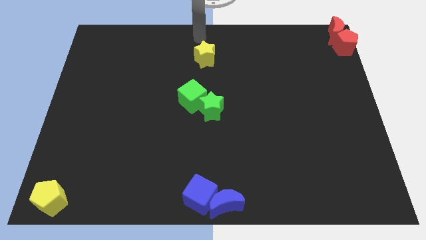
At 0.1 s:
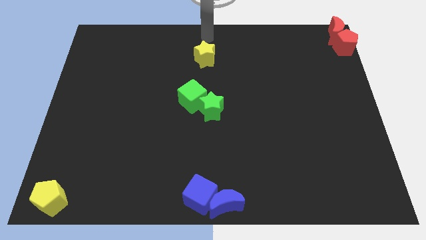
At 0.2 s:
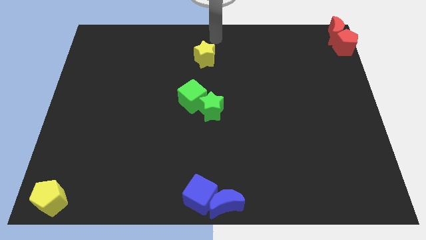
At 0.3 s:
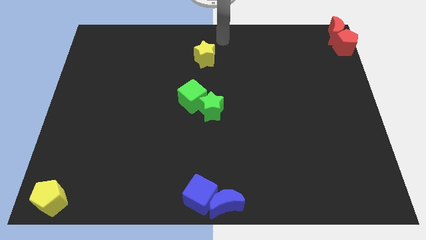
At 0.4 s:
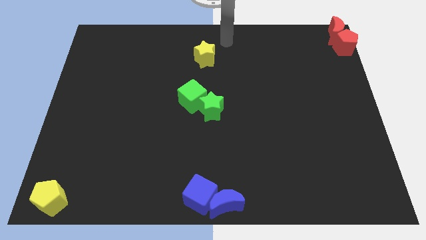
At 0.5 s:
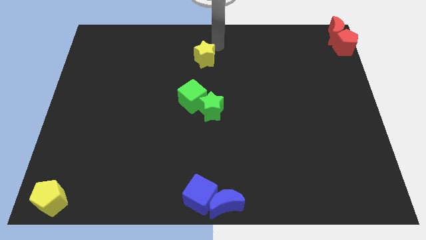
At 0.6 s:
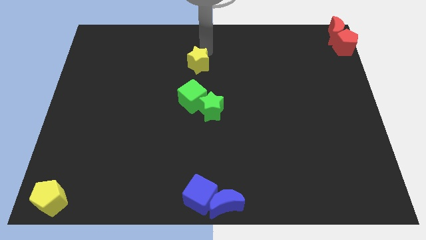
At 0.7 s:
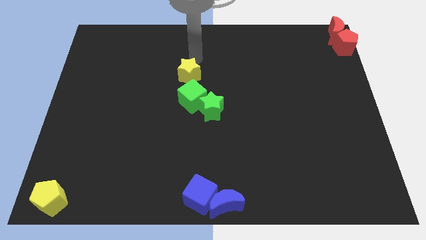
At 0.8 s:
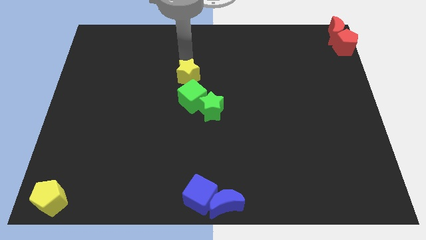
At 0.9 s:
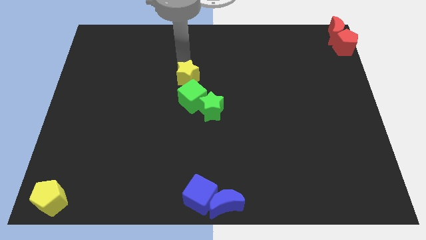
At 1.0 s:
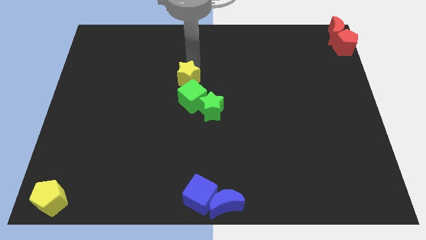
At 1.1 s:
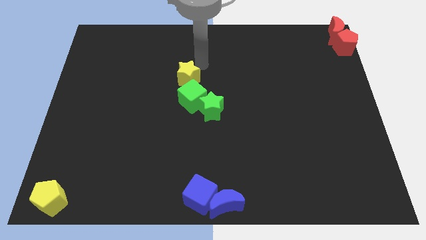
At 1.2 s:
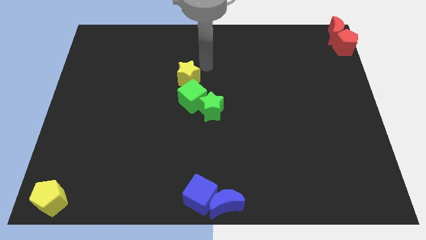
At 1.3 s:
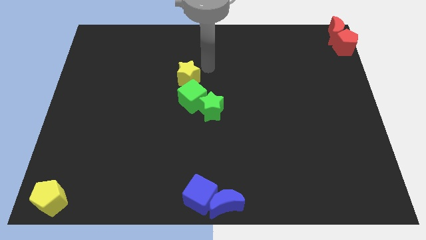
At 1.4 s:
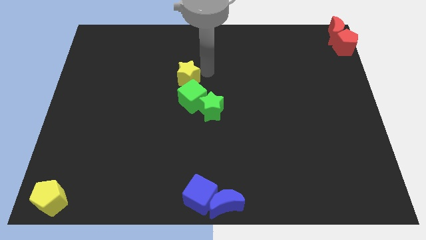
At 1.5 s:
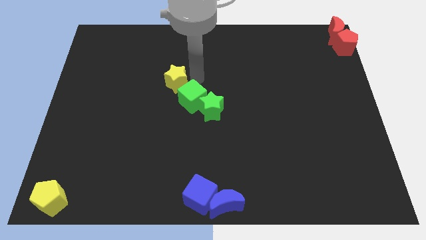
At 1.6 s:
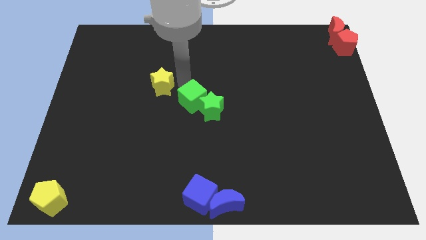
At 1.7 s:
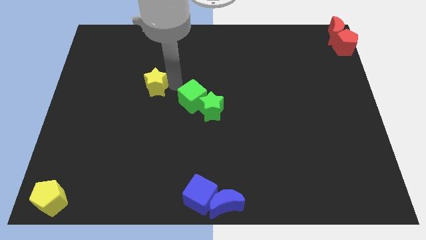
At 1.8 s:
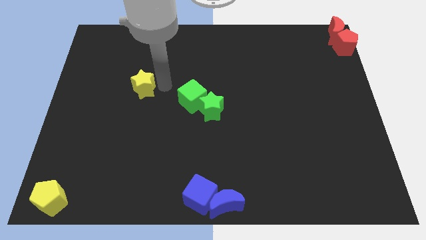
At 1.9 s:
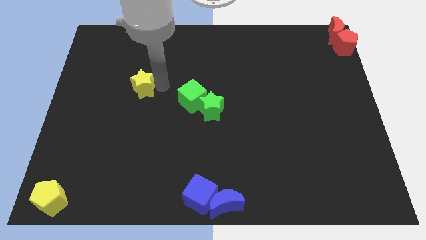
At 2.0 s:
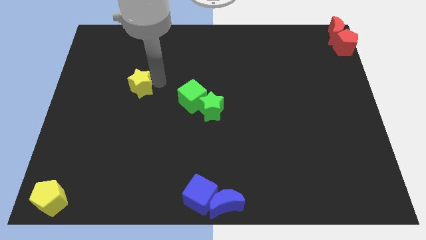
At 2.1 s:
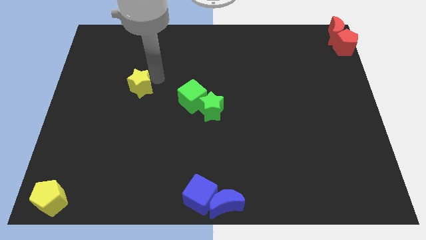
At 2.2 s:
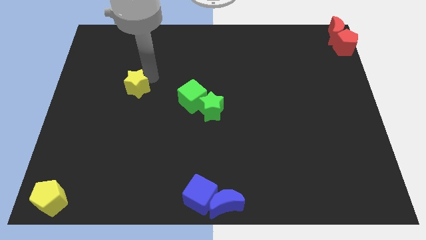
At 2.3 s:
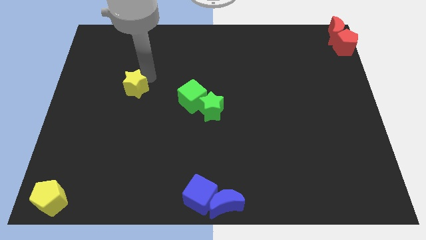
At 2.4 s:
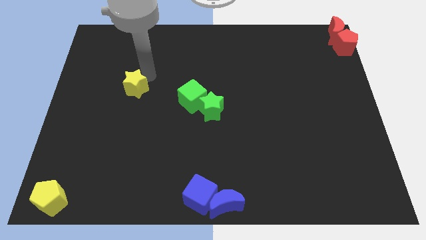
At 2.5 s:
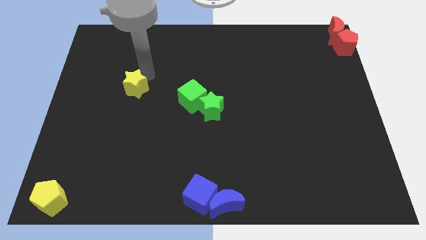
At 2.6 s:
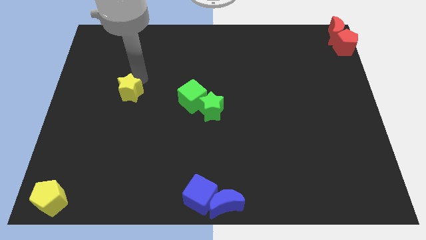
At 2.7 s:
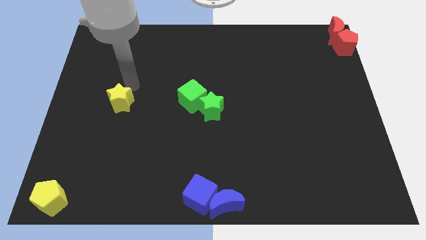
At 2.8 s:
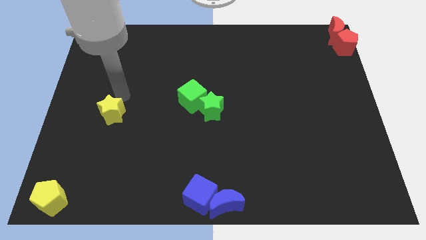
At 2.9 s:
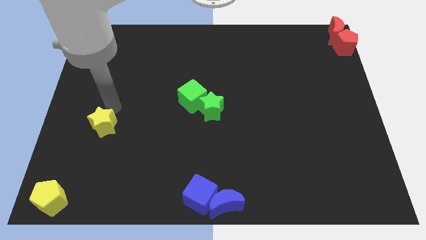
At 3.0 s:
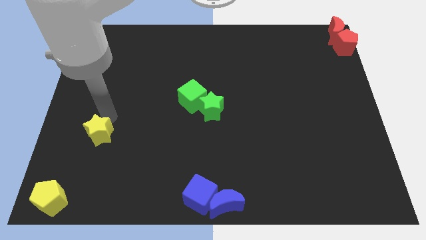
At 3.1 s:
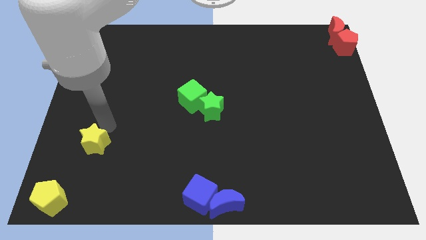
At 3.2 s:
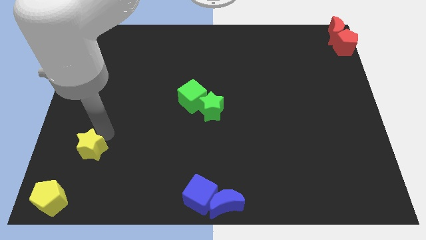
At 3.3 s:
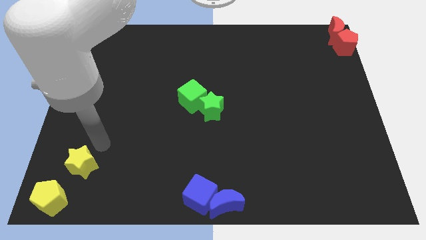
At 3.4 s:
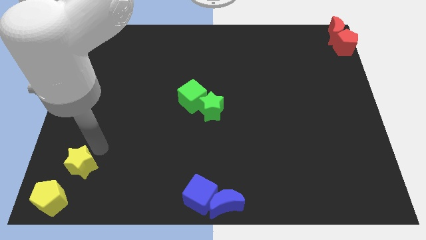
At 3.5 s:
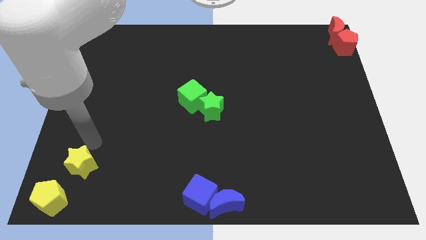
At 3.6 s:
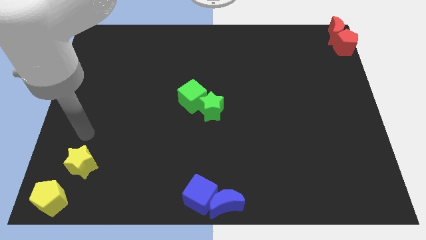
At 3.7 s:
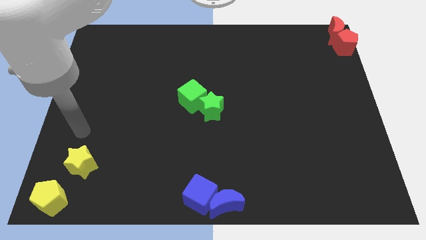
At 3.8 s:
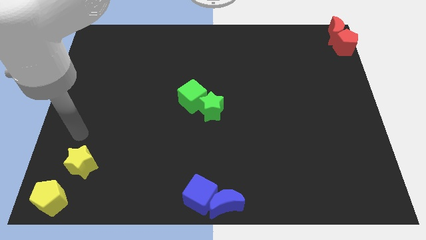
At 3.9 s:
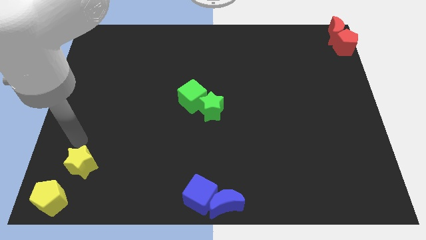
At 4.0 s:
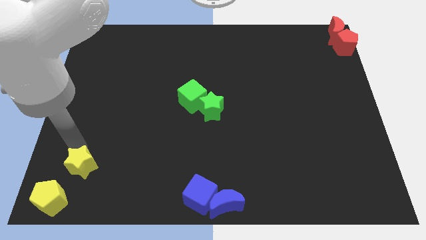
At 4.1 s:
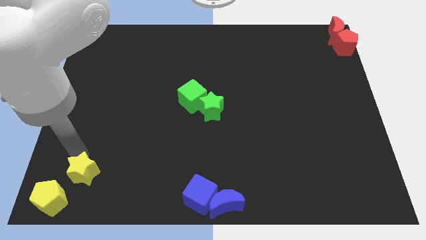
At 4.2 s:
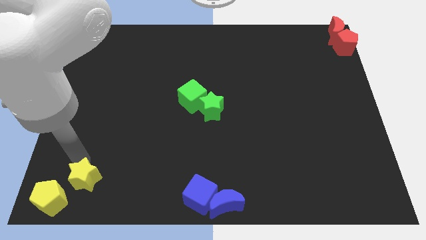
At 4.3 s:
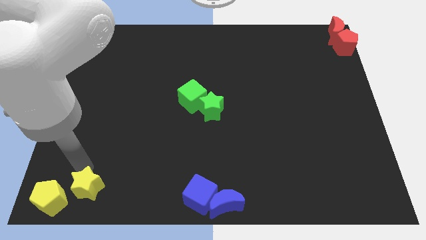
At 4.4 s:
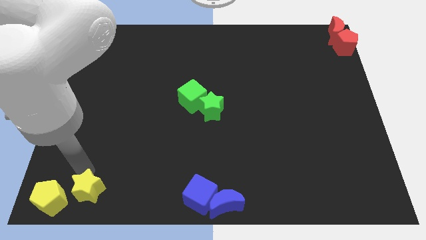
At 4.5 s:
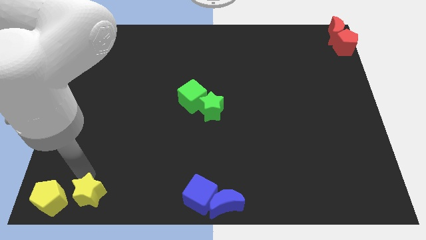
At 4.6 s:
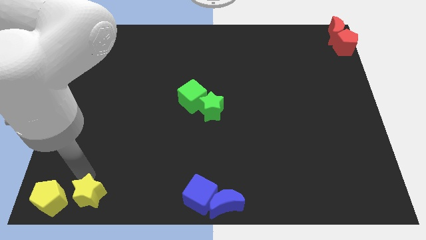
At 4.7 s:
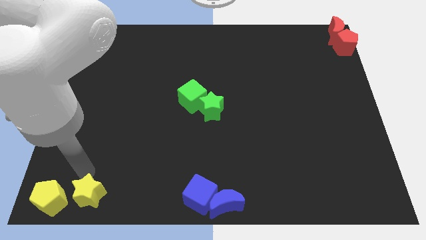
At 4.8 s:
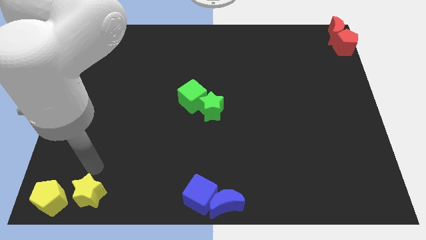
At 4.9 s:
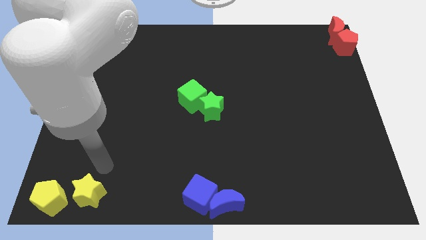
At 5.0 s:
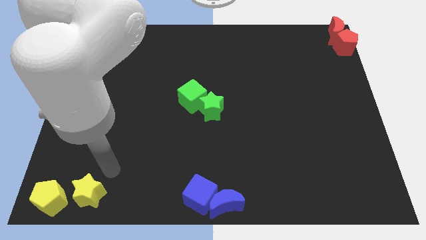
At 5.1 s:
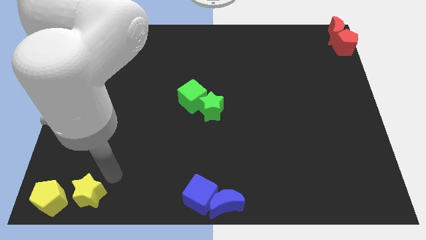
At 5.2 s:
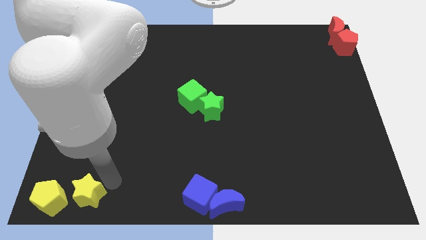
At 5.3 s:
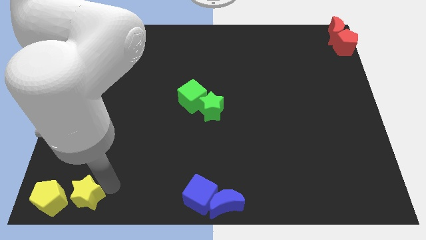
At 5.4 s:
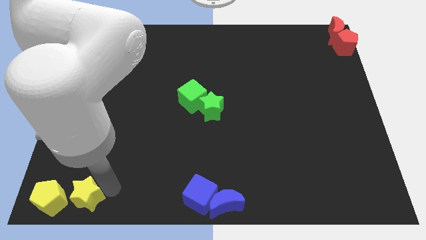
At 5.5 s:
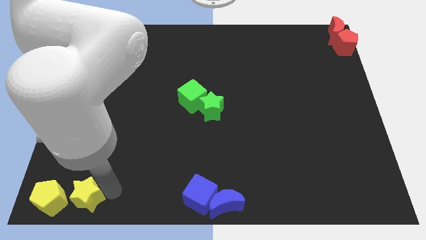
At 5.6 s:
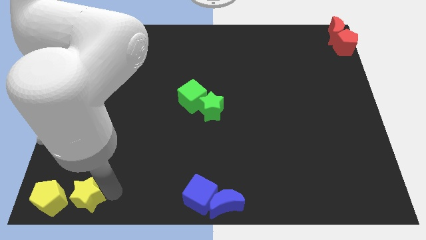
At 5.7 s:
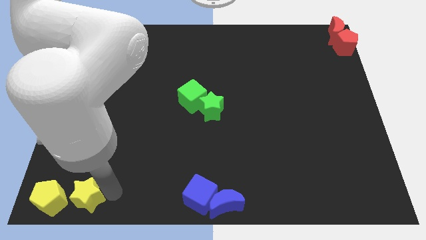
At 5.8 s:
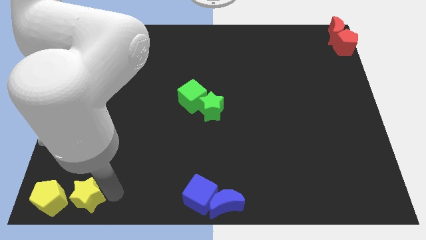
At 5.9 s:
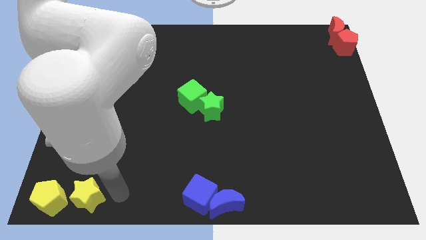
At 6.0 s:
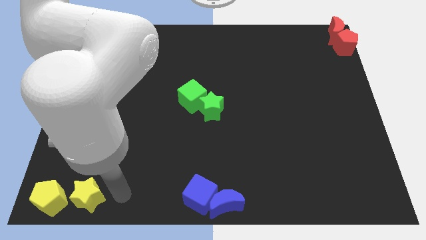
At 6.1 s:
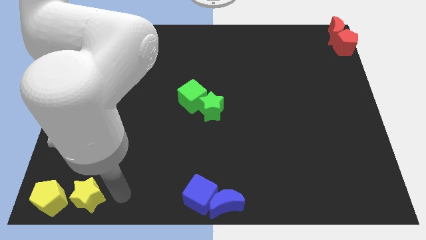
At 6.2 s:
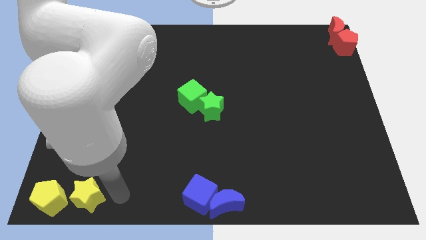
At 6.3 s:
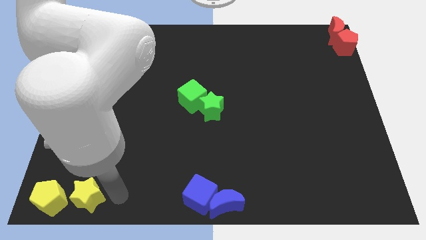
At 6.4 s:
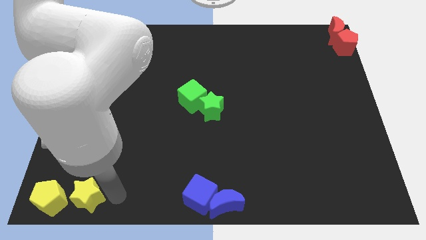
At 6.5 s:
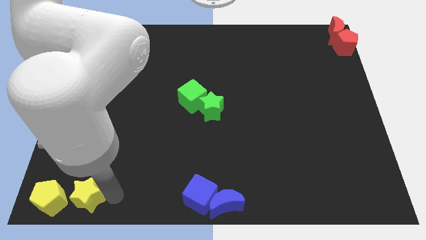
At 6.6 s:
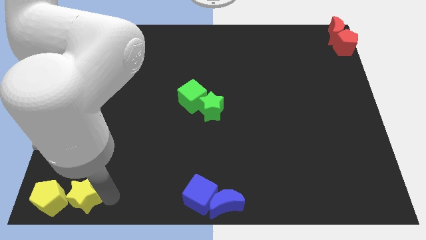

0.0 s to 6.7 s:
move yellow star beside yellow pentagon

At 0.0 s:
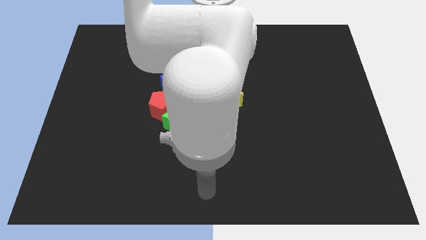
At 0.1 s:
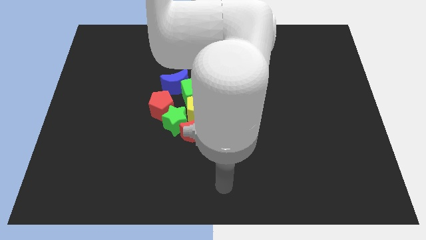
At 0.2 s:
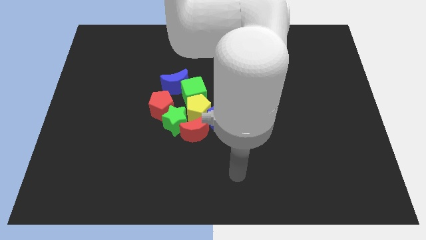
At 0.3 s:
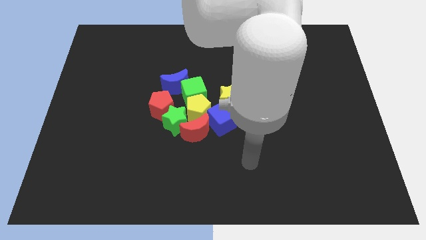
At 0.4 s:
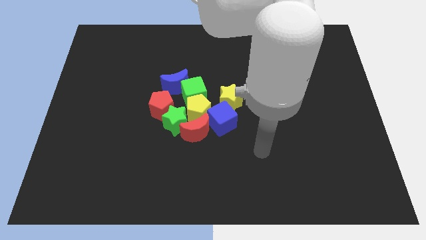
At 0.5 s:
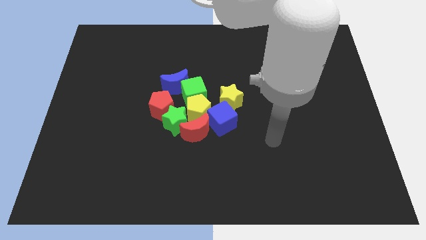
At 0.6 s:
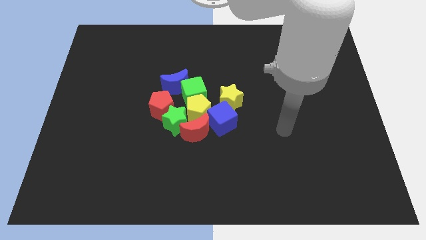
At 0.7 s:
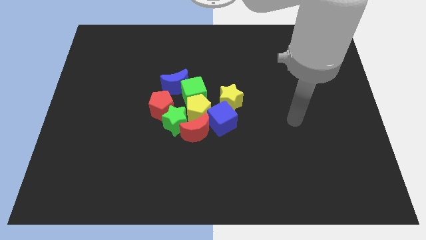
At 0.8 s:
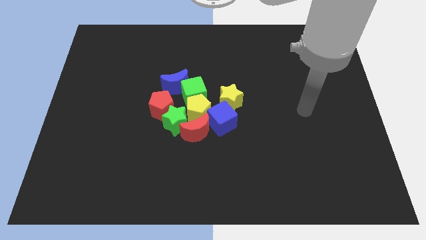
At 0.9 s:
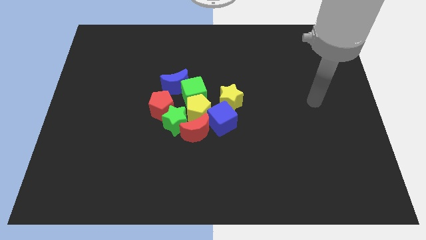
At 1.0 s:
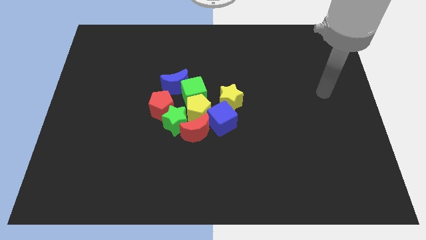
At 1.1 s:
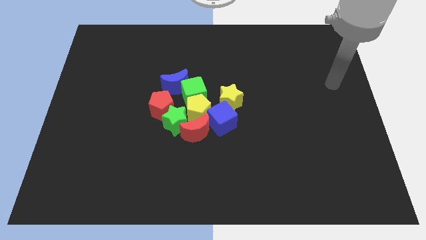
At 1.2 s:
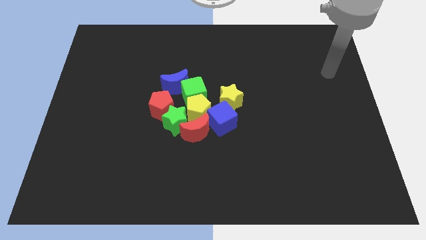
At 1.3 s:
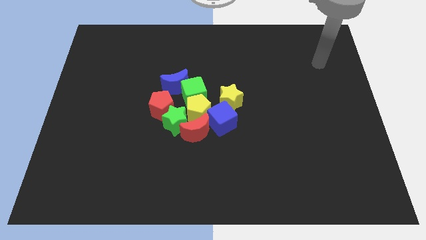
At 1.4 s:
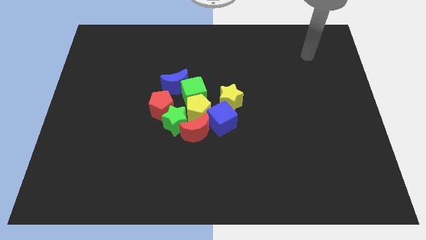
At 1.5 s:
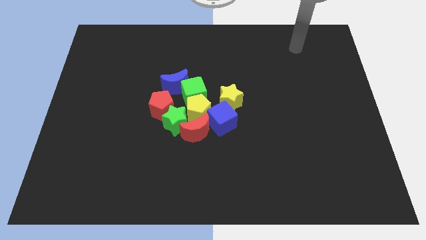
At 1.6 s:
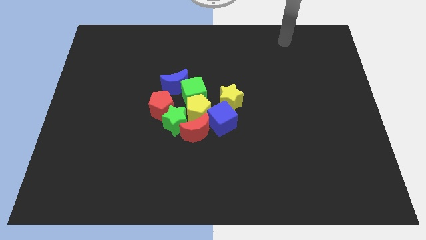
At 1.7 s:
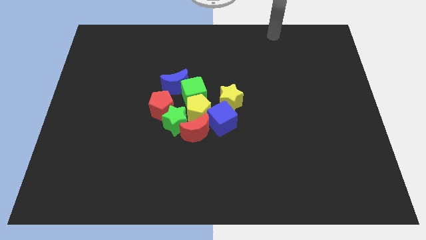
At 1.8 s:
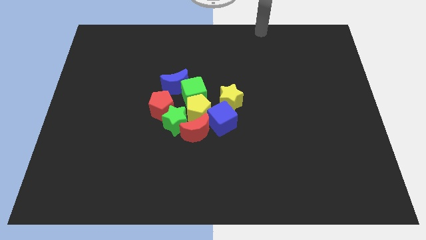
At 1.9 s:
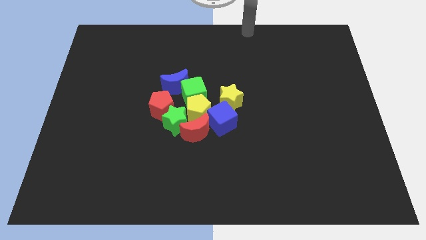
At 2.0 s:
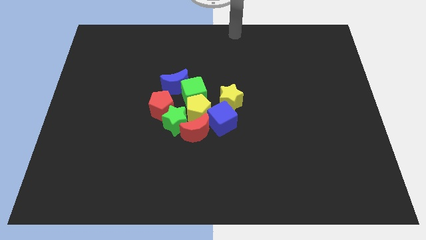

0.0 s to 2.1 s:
point the arm to the top center of the board

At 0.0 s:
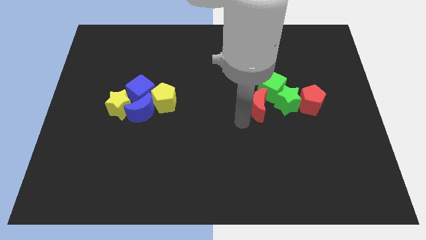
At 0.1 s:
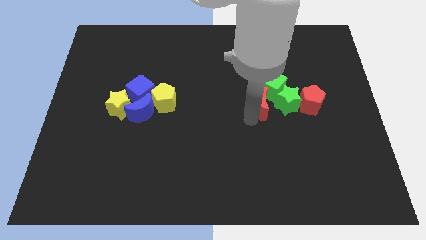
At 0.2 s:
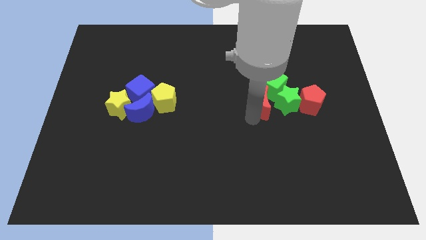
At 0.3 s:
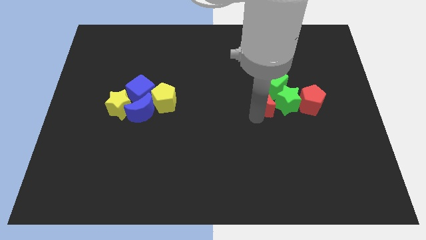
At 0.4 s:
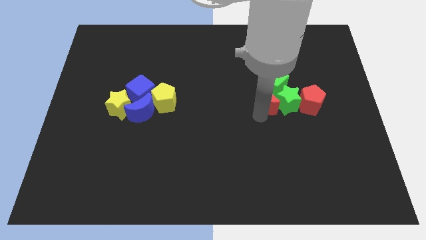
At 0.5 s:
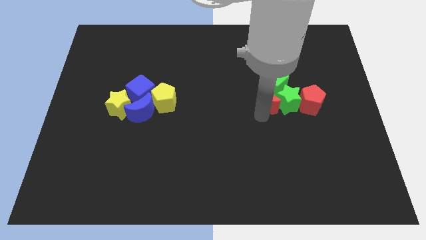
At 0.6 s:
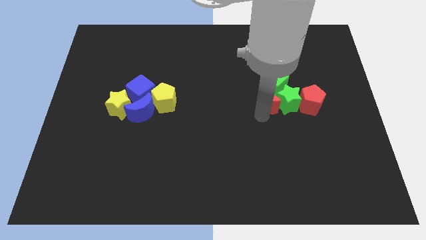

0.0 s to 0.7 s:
move the red moon below to the green blocks
